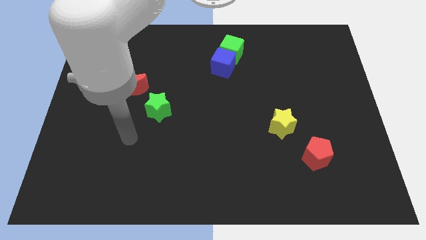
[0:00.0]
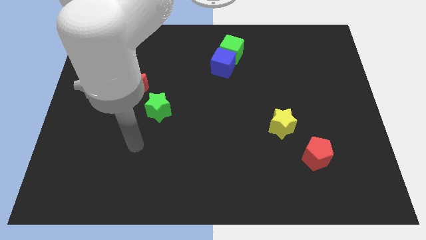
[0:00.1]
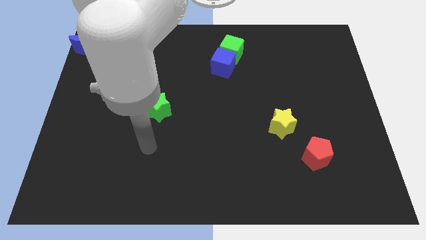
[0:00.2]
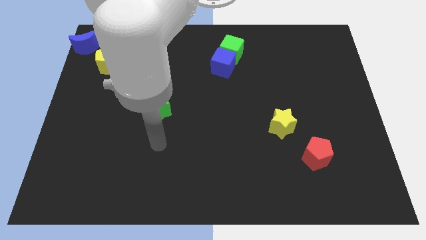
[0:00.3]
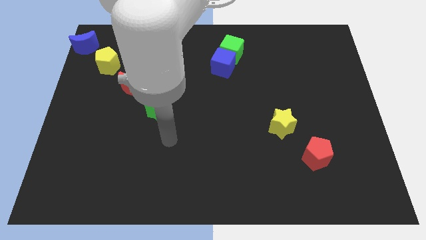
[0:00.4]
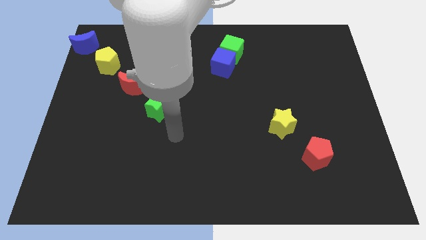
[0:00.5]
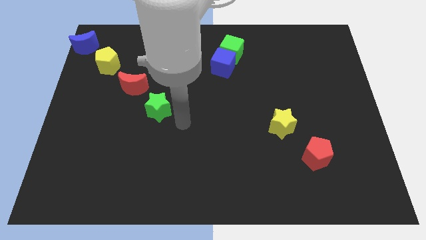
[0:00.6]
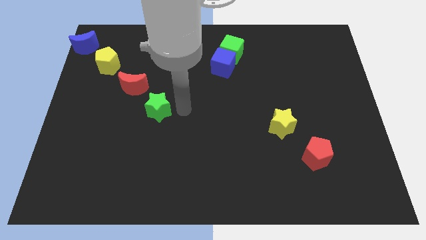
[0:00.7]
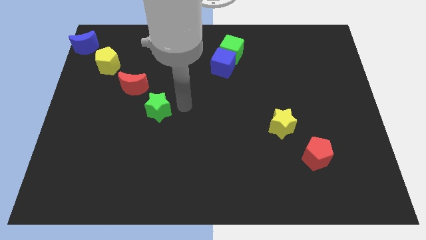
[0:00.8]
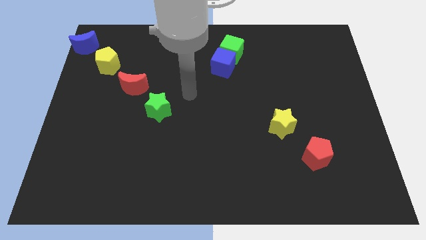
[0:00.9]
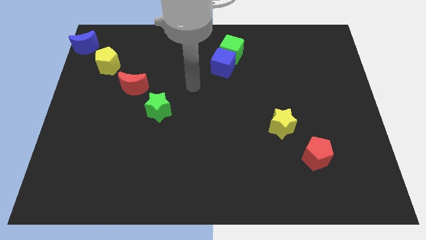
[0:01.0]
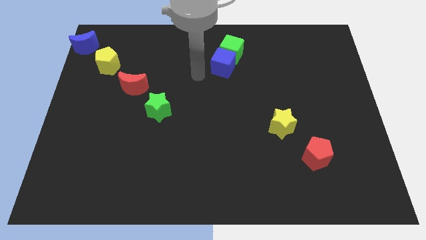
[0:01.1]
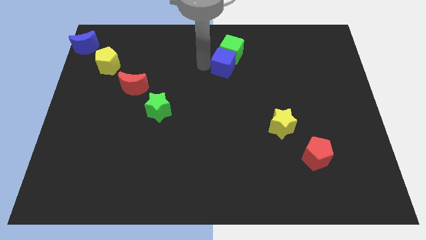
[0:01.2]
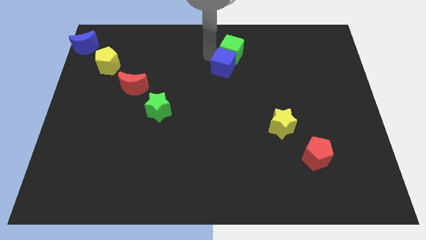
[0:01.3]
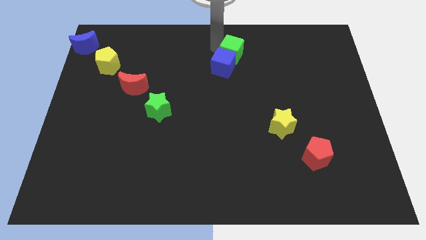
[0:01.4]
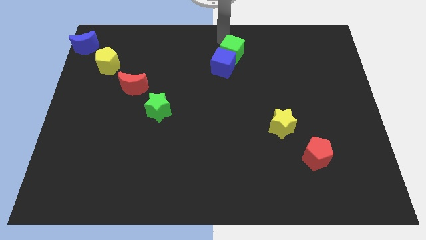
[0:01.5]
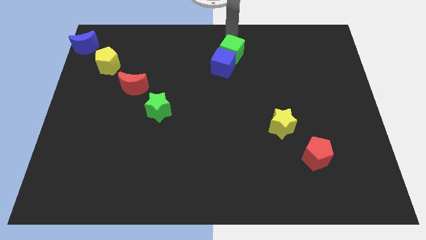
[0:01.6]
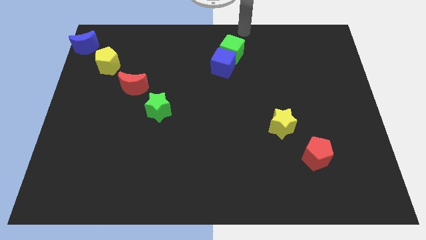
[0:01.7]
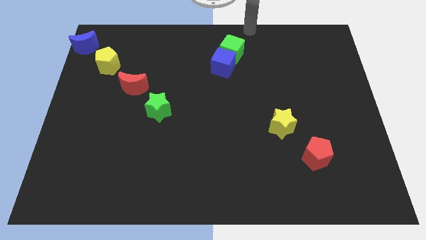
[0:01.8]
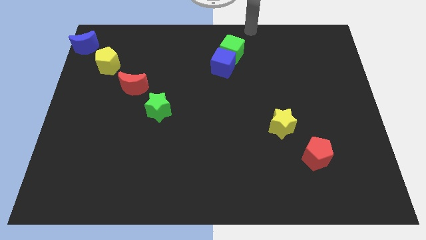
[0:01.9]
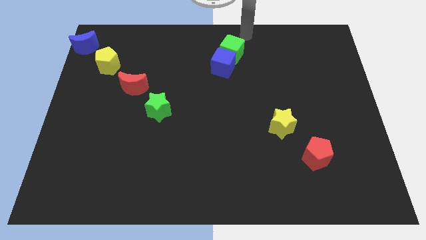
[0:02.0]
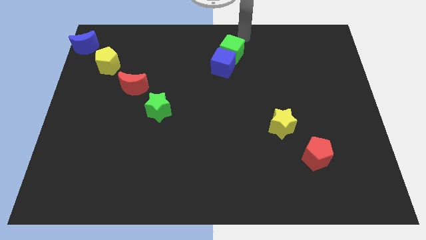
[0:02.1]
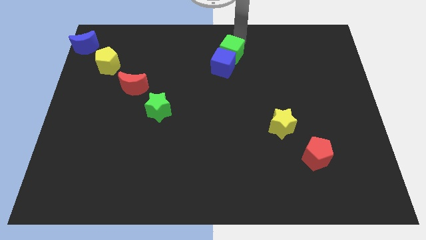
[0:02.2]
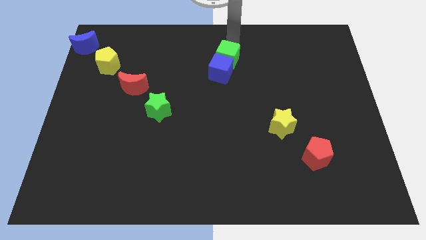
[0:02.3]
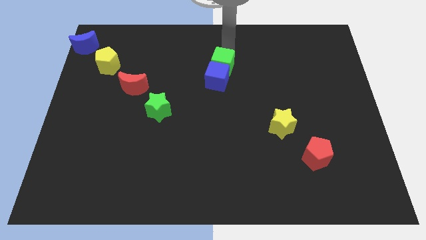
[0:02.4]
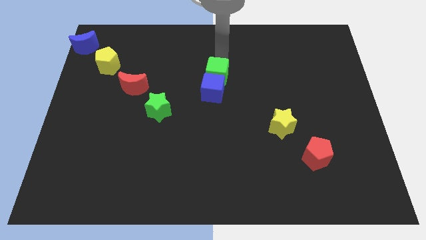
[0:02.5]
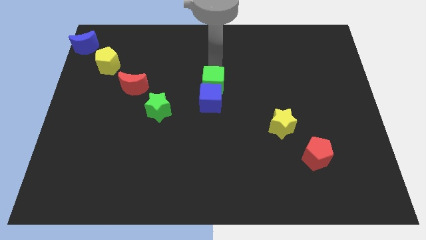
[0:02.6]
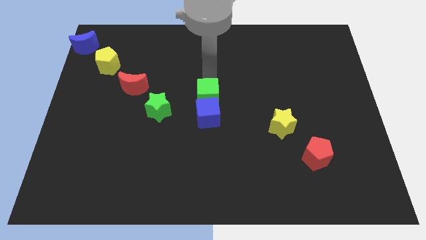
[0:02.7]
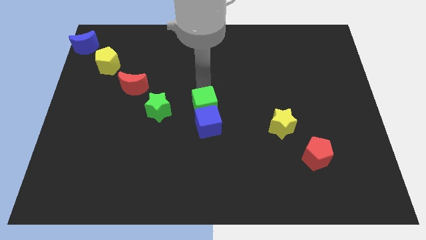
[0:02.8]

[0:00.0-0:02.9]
push the group of cubes to the bottom

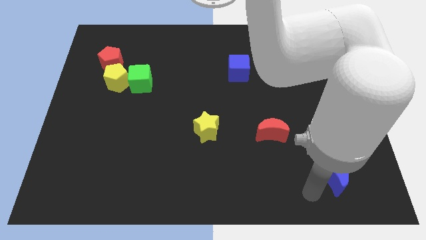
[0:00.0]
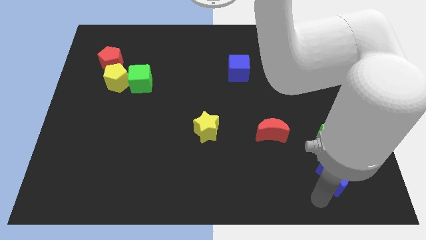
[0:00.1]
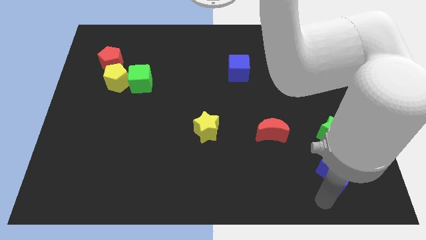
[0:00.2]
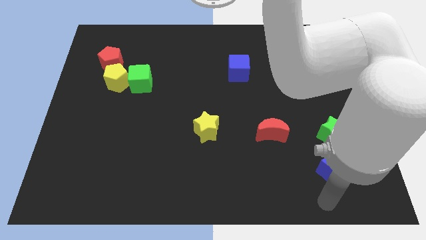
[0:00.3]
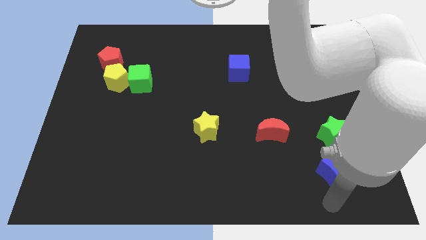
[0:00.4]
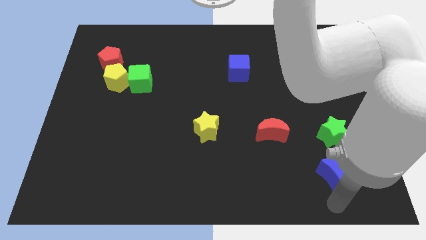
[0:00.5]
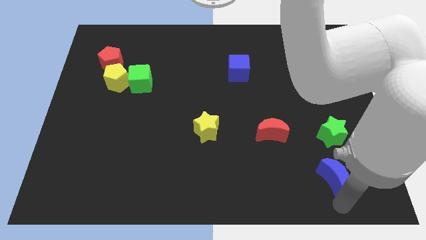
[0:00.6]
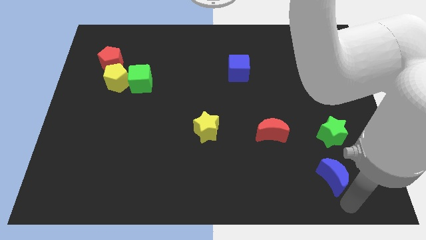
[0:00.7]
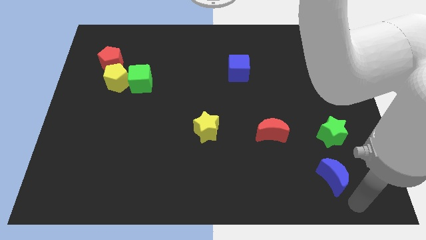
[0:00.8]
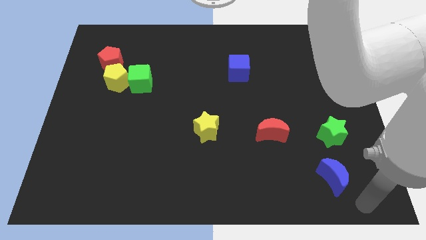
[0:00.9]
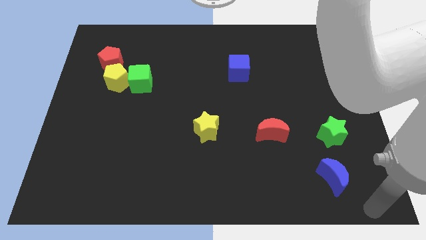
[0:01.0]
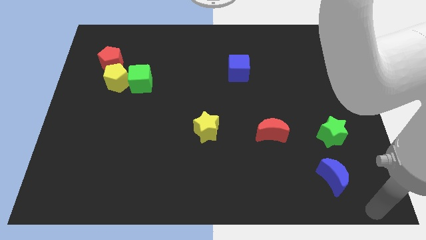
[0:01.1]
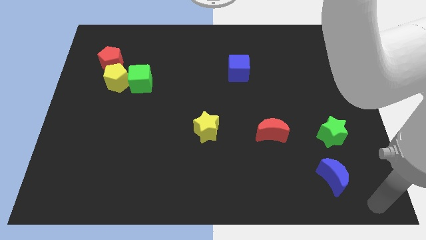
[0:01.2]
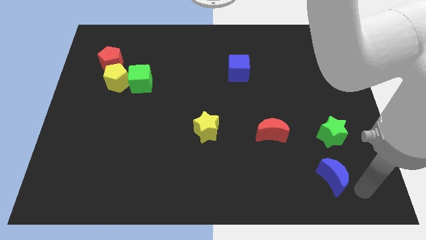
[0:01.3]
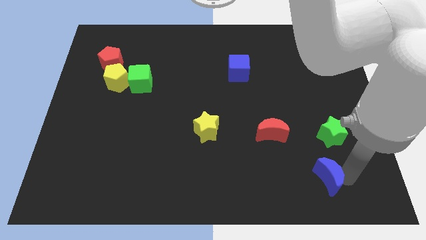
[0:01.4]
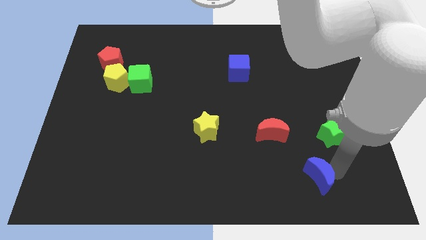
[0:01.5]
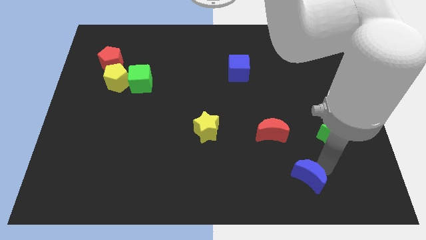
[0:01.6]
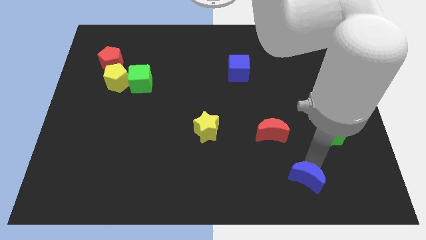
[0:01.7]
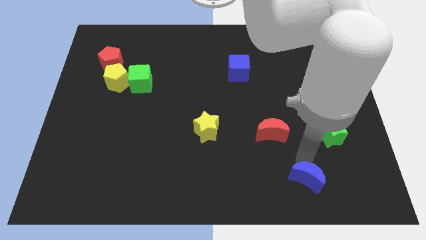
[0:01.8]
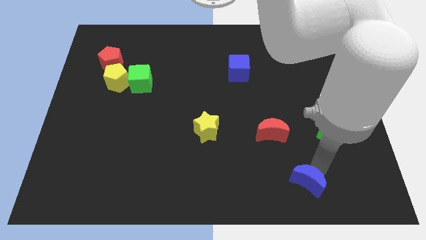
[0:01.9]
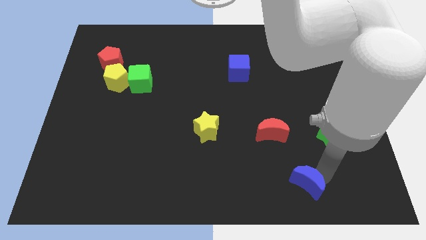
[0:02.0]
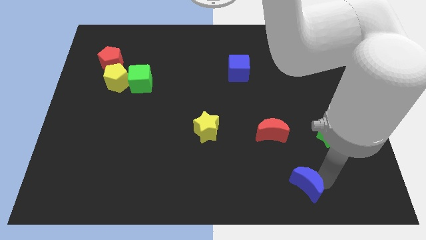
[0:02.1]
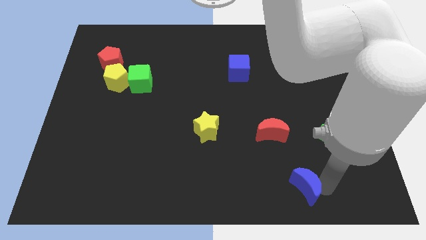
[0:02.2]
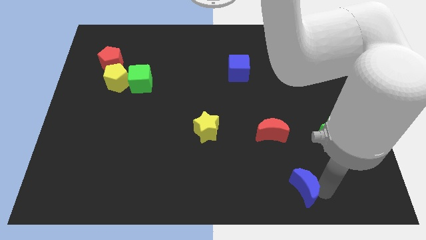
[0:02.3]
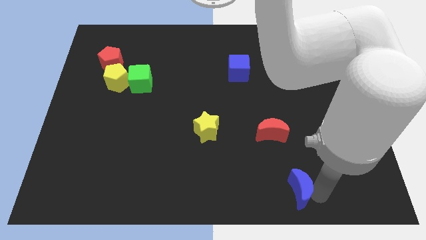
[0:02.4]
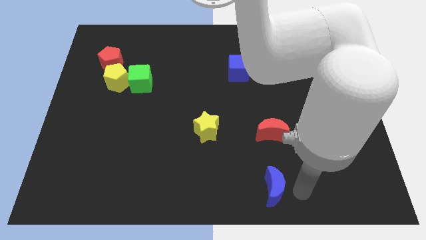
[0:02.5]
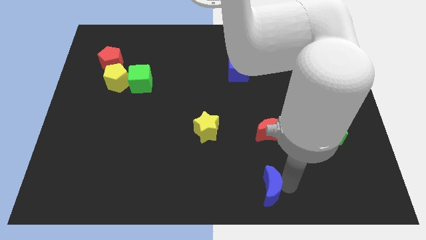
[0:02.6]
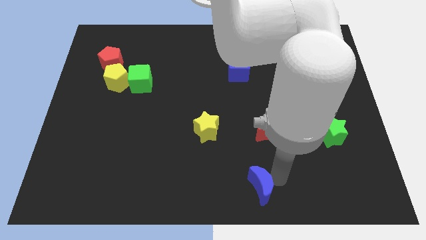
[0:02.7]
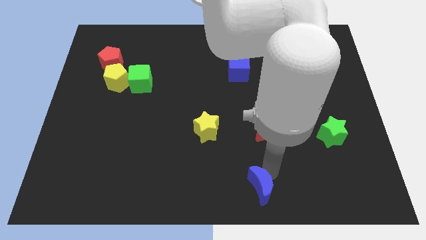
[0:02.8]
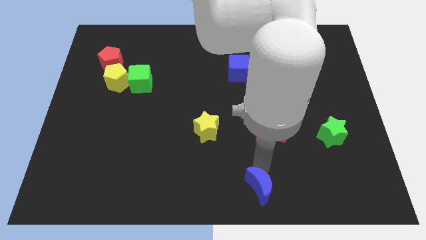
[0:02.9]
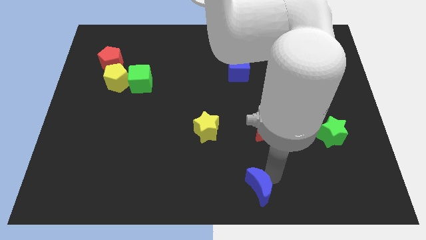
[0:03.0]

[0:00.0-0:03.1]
move blue moon towards bottom center

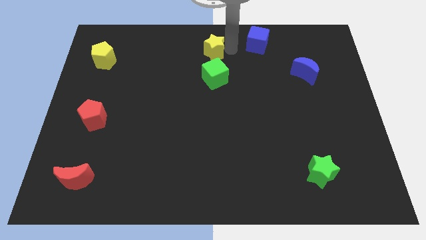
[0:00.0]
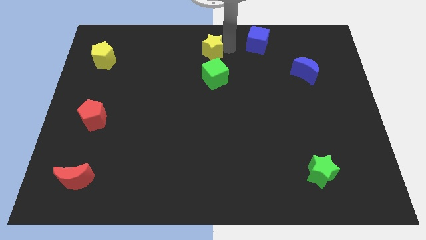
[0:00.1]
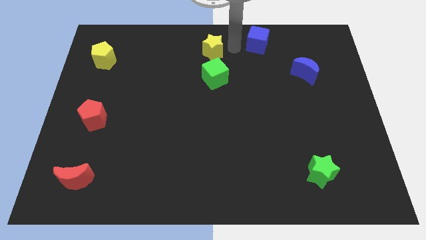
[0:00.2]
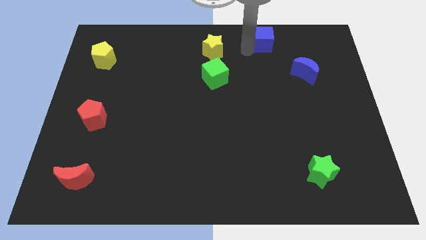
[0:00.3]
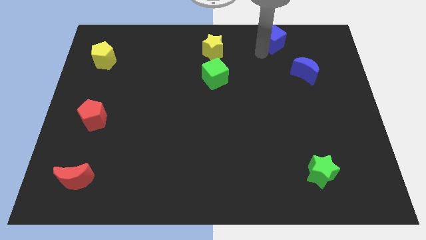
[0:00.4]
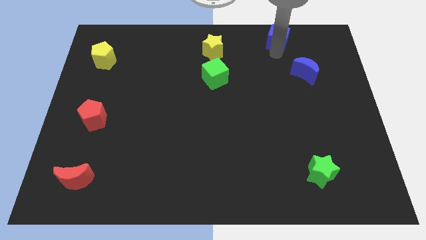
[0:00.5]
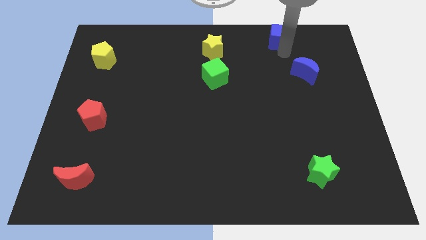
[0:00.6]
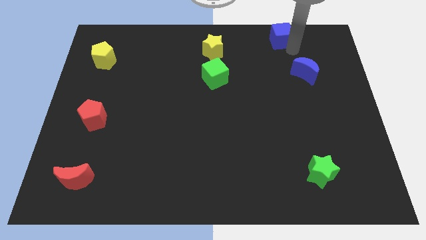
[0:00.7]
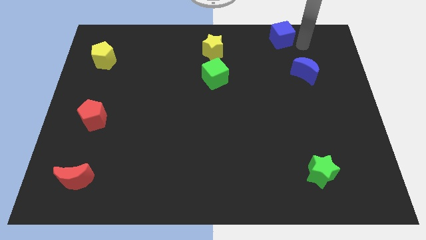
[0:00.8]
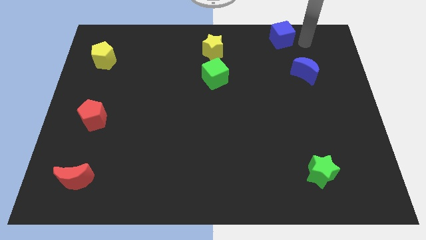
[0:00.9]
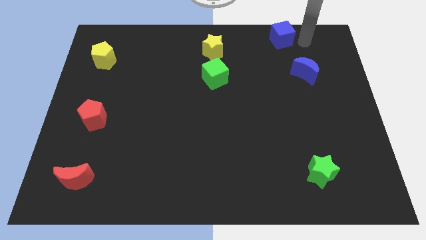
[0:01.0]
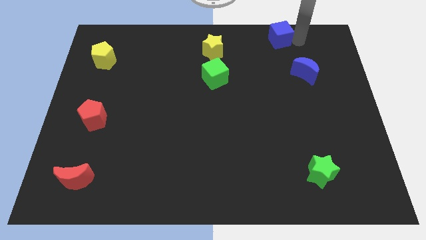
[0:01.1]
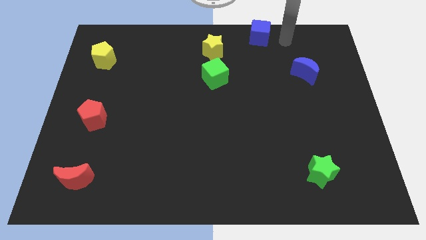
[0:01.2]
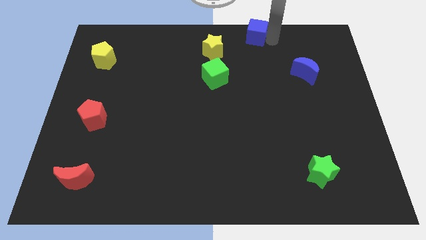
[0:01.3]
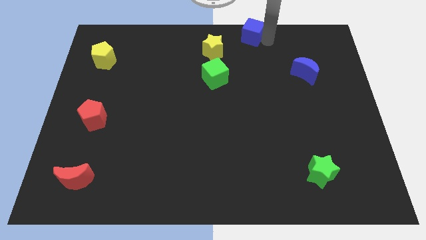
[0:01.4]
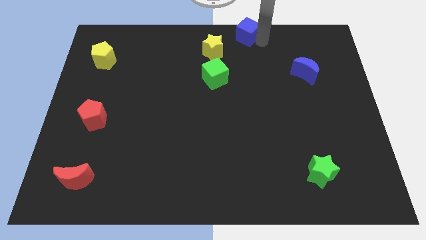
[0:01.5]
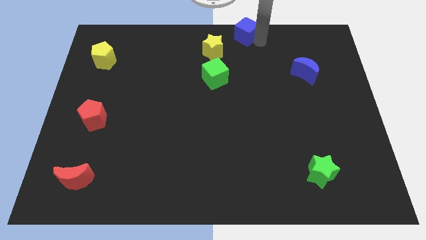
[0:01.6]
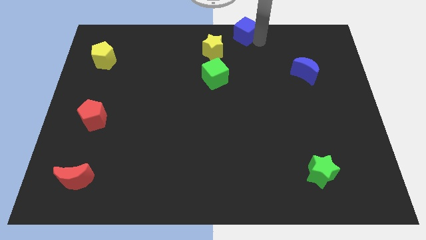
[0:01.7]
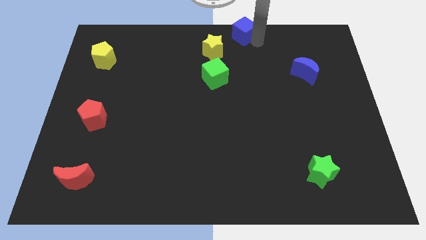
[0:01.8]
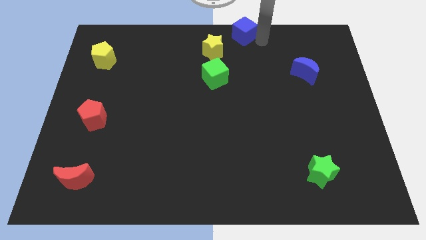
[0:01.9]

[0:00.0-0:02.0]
move the blue cube towards the left side

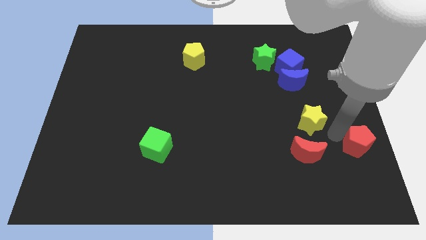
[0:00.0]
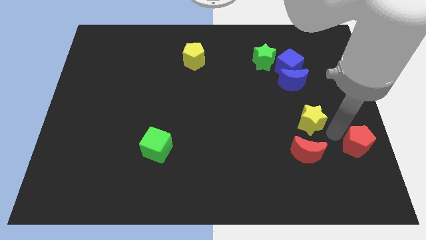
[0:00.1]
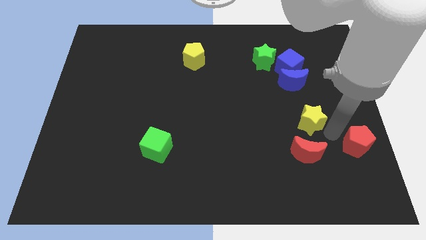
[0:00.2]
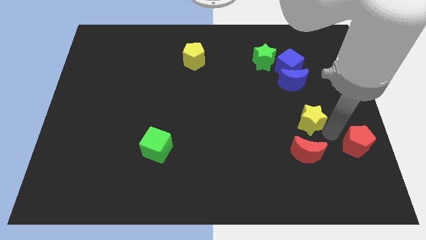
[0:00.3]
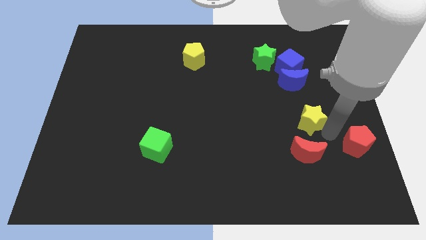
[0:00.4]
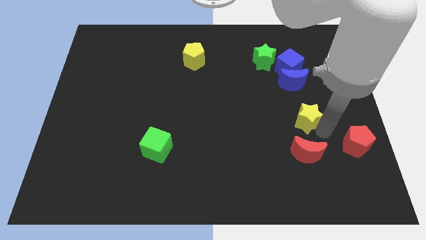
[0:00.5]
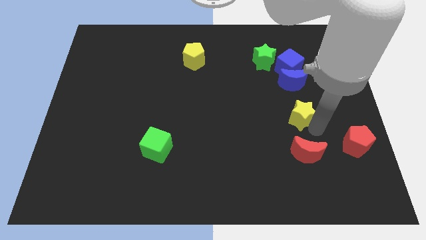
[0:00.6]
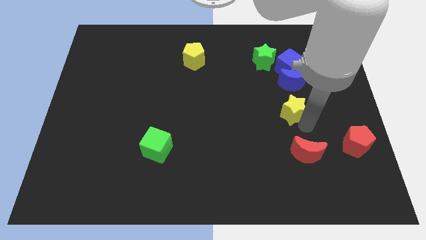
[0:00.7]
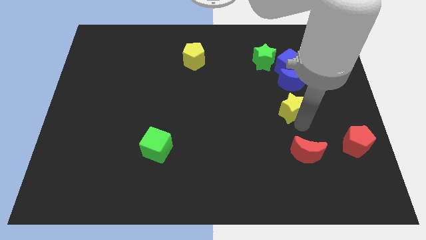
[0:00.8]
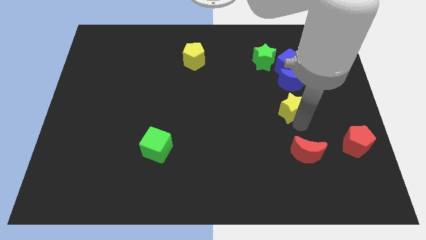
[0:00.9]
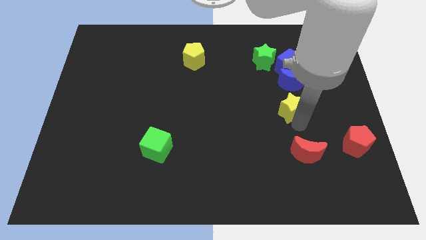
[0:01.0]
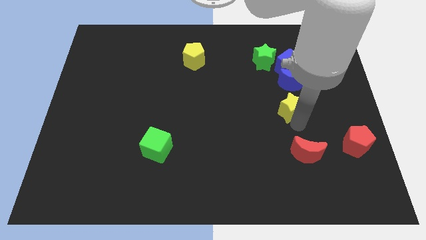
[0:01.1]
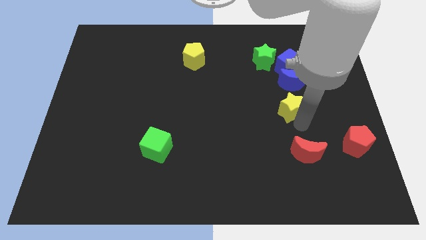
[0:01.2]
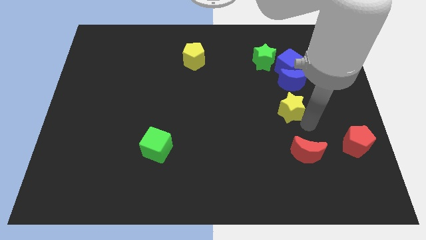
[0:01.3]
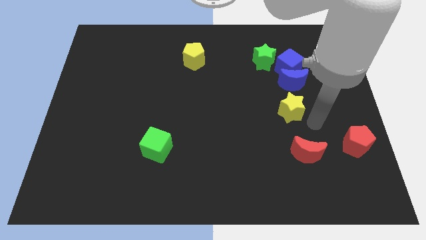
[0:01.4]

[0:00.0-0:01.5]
move the yellow star to the bottom of the blue crescent
